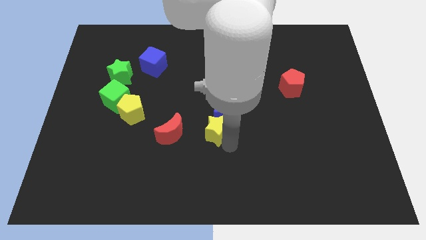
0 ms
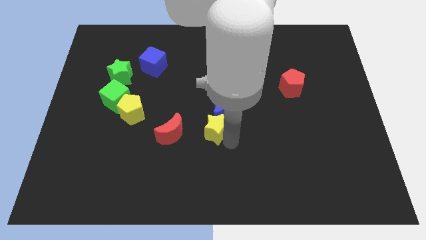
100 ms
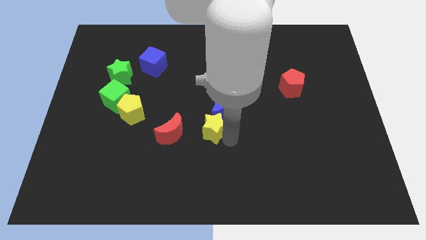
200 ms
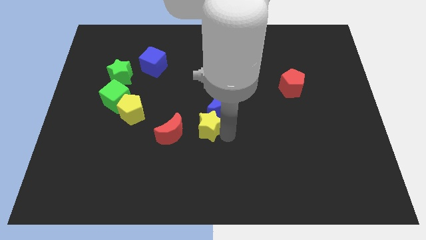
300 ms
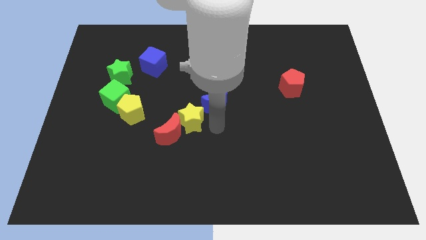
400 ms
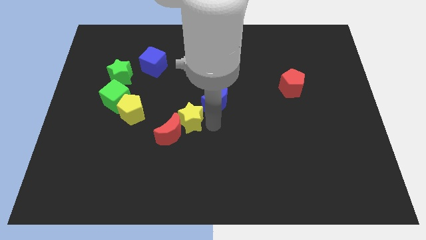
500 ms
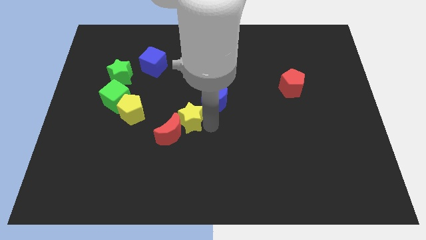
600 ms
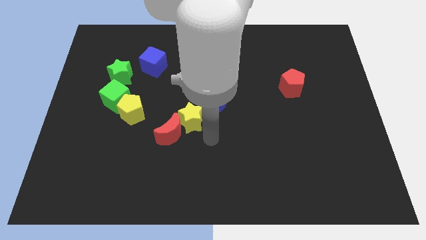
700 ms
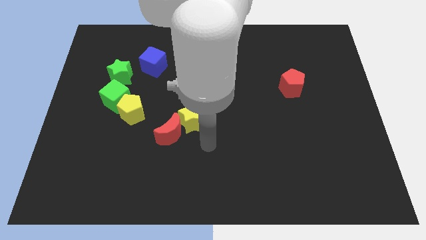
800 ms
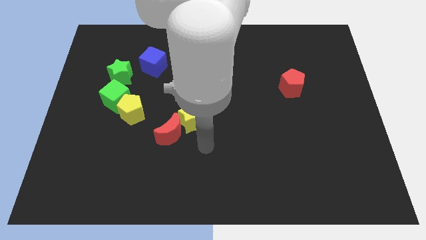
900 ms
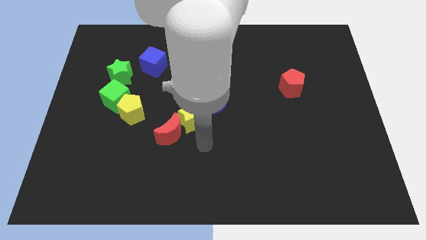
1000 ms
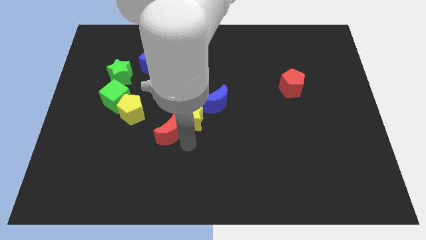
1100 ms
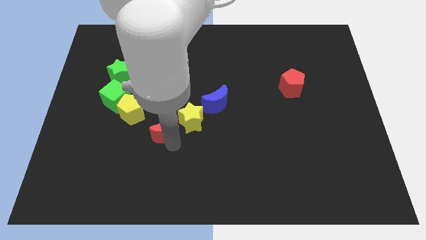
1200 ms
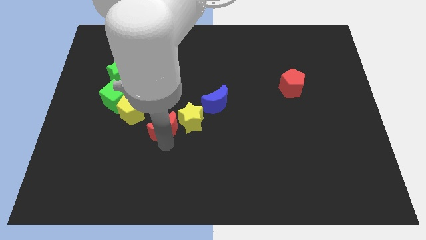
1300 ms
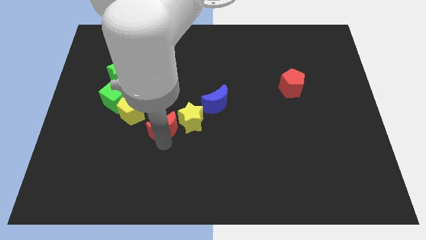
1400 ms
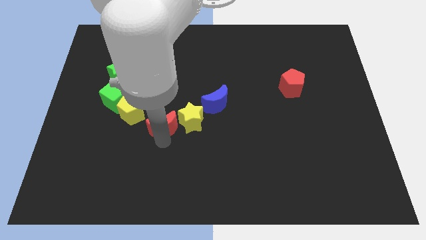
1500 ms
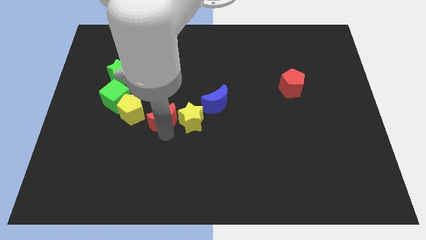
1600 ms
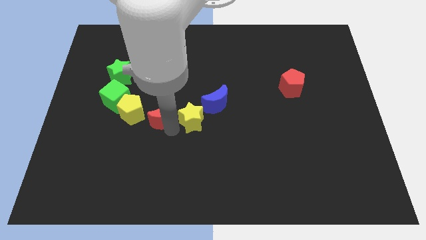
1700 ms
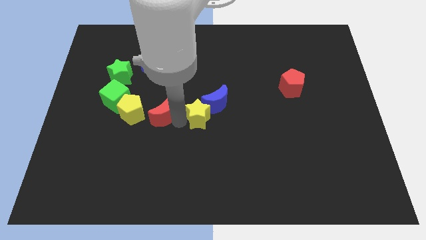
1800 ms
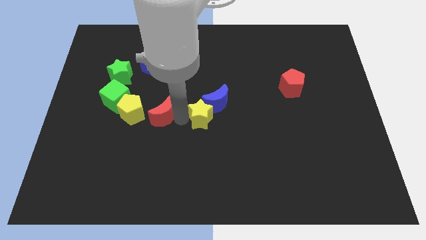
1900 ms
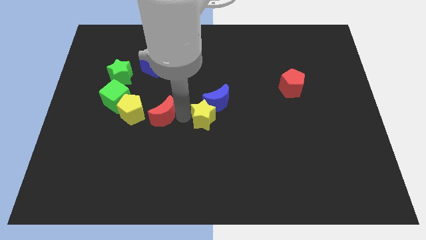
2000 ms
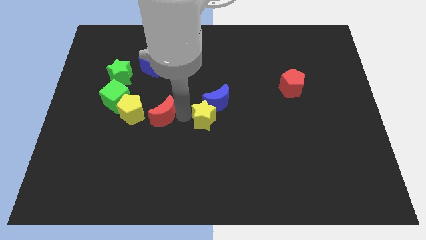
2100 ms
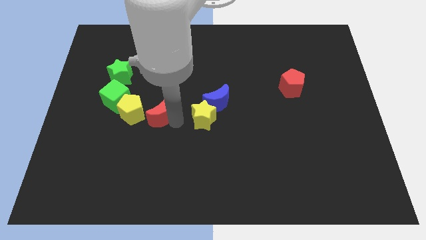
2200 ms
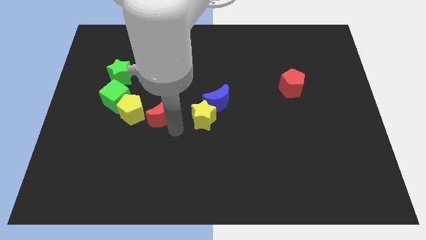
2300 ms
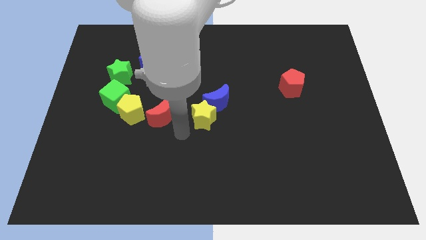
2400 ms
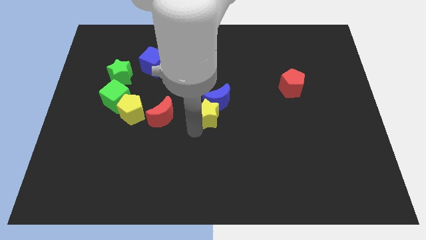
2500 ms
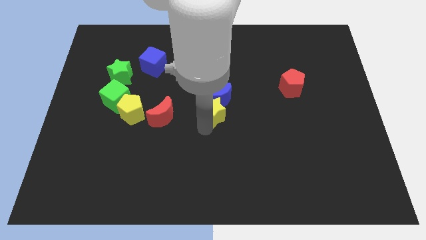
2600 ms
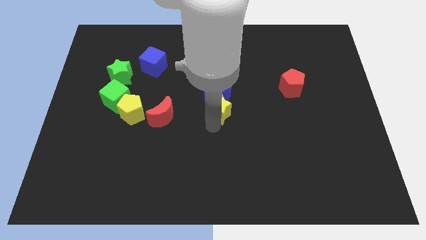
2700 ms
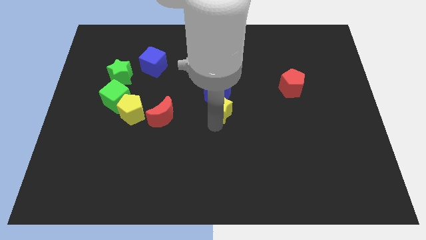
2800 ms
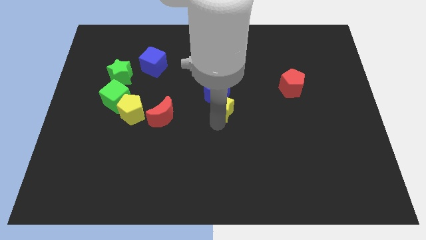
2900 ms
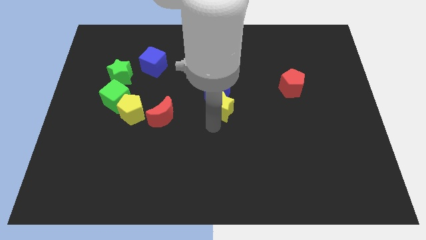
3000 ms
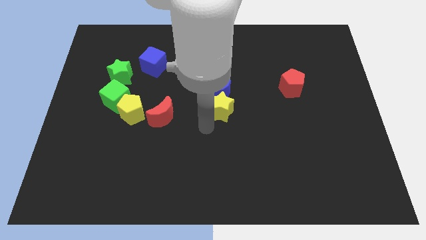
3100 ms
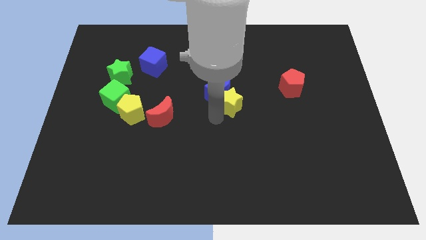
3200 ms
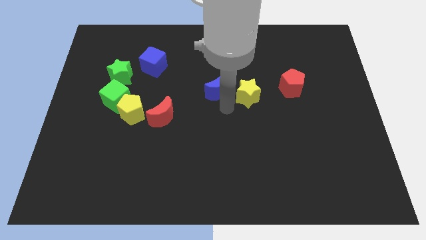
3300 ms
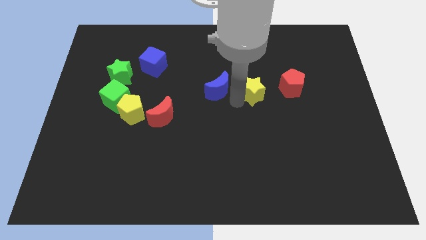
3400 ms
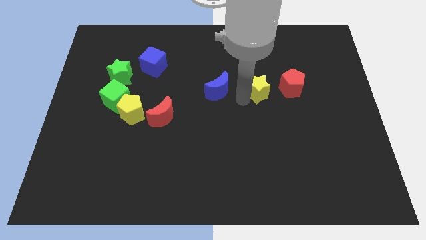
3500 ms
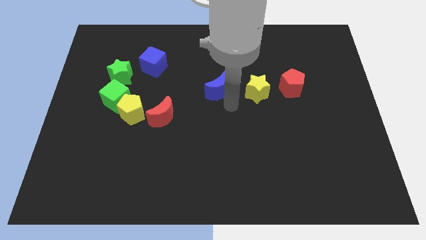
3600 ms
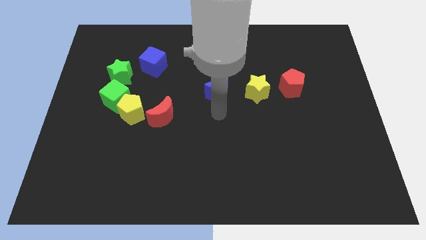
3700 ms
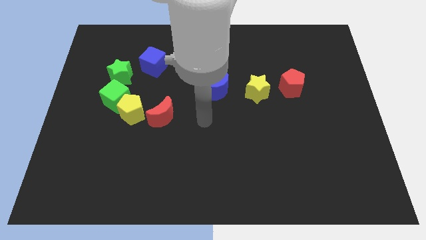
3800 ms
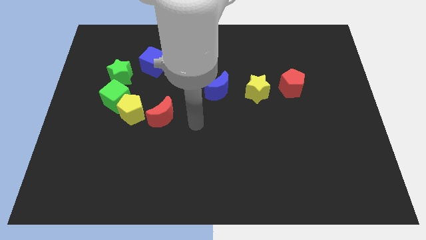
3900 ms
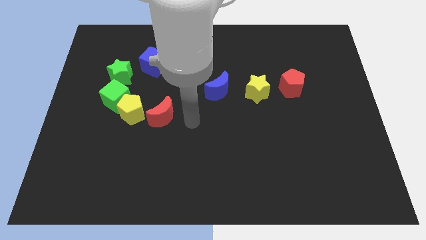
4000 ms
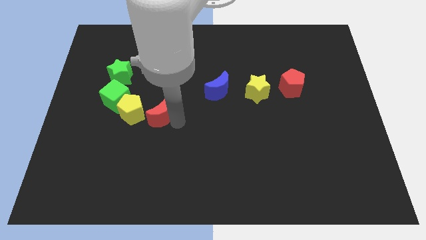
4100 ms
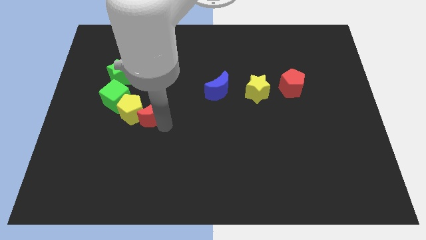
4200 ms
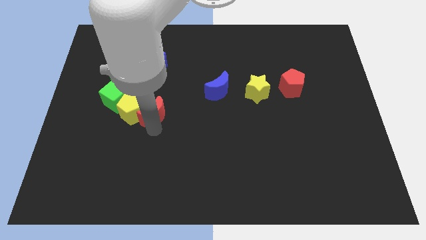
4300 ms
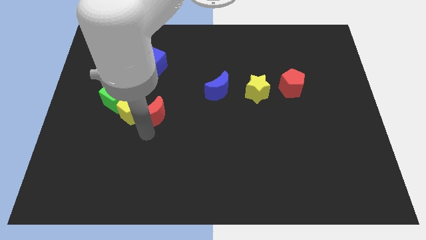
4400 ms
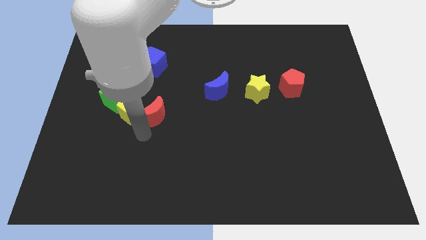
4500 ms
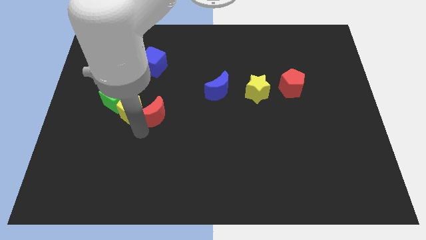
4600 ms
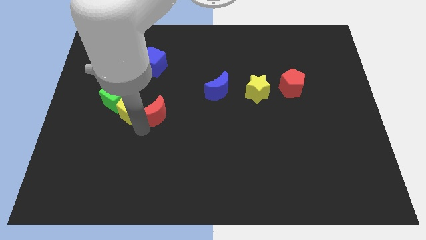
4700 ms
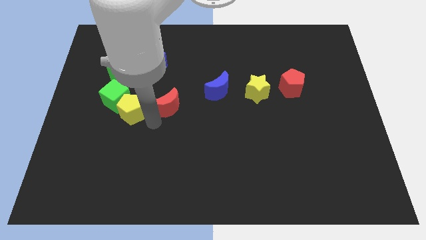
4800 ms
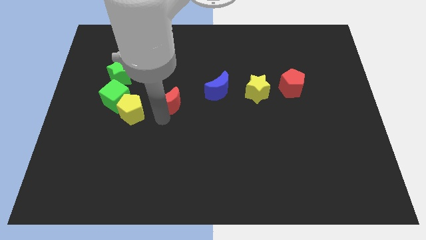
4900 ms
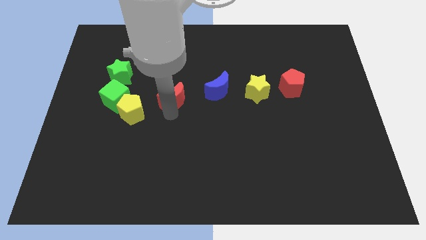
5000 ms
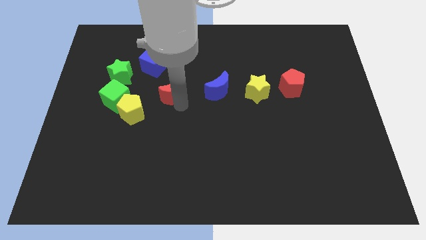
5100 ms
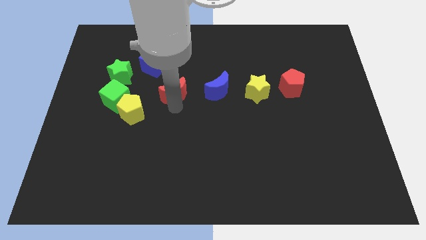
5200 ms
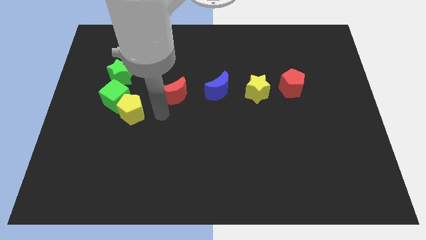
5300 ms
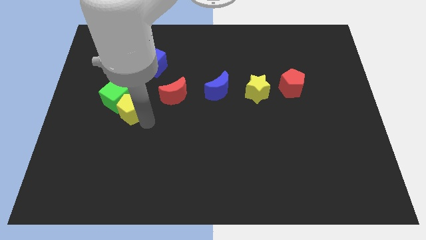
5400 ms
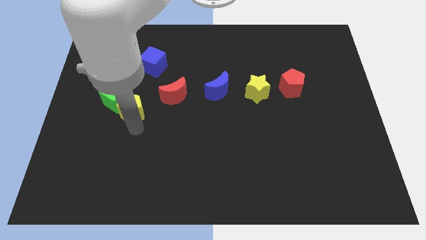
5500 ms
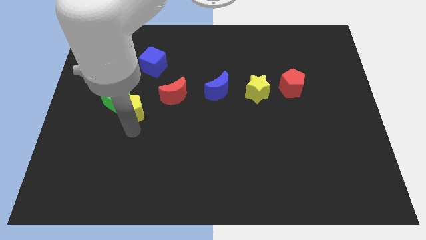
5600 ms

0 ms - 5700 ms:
put the red pentagon yellow star blue and red crescents in a line horizontally

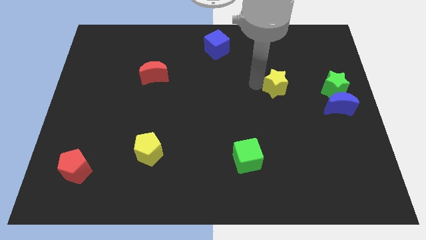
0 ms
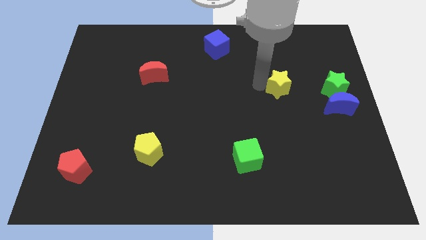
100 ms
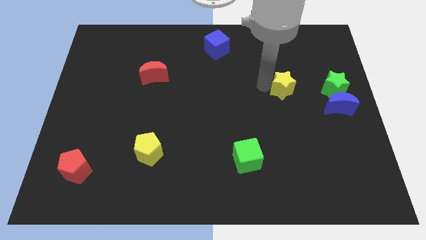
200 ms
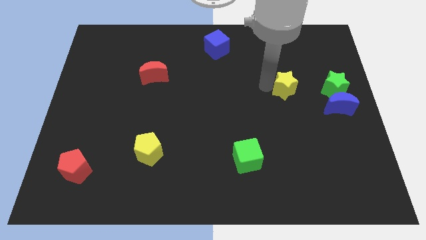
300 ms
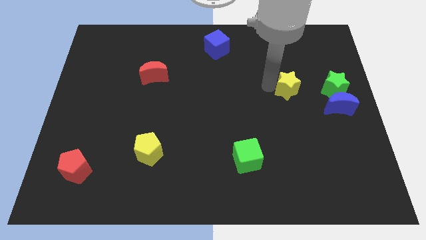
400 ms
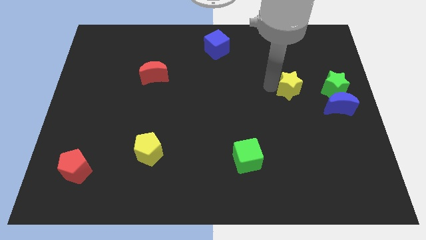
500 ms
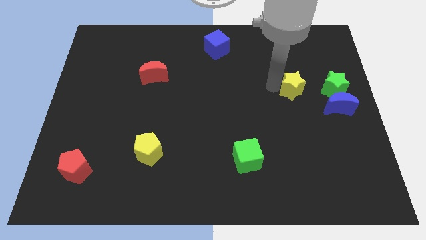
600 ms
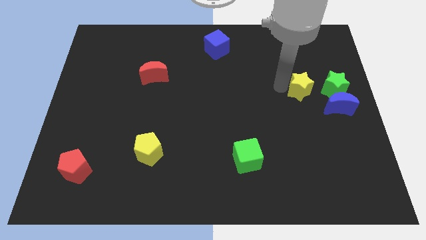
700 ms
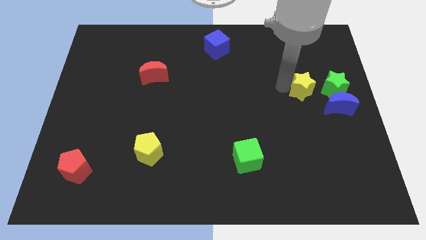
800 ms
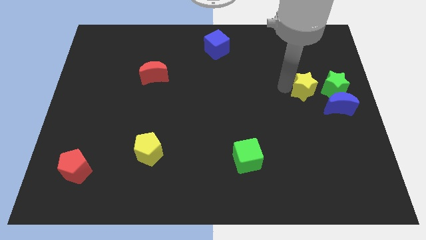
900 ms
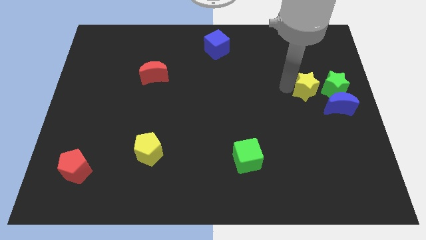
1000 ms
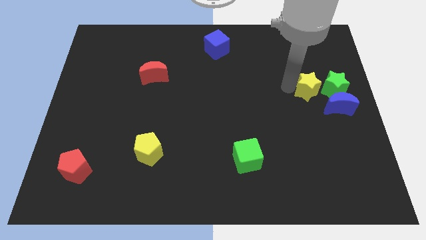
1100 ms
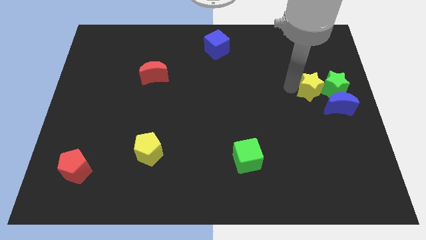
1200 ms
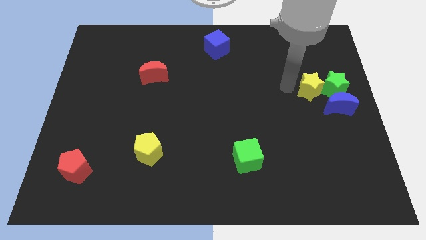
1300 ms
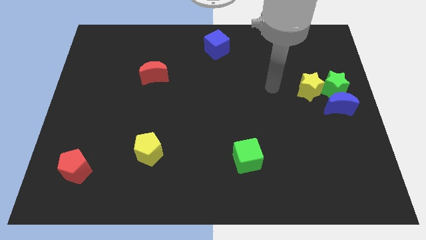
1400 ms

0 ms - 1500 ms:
move the yellow star to the left of the green star

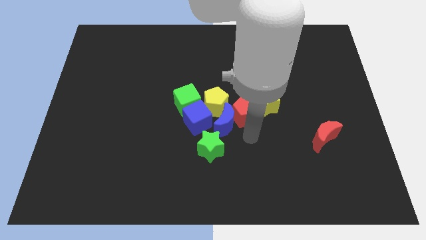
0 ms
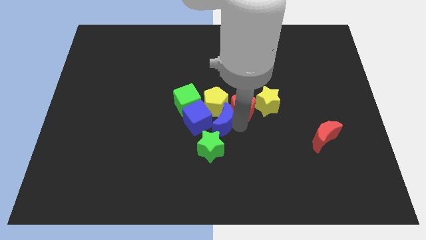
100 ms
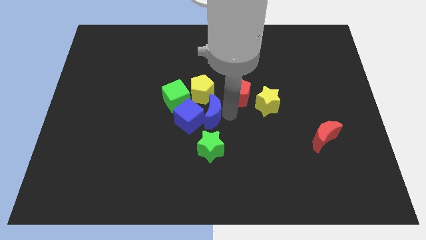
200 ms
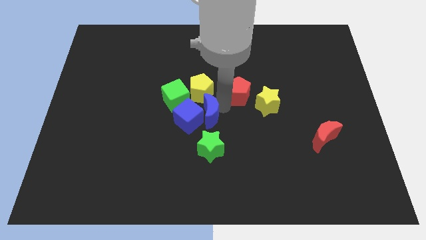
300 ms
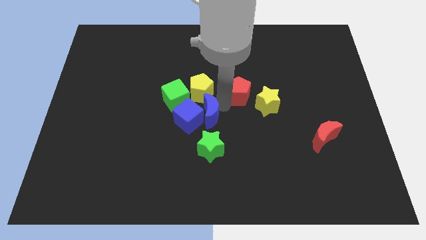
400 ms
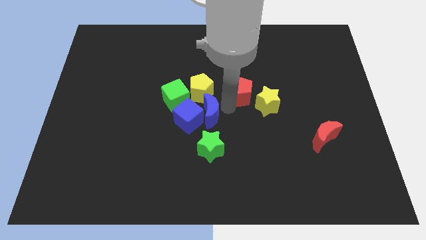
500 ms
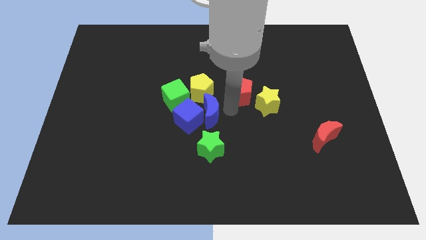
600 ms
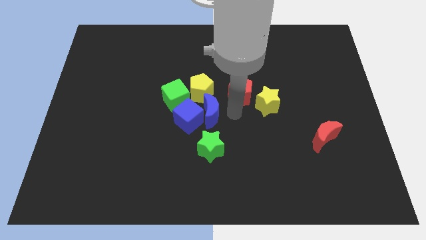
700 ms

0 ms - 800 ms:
place the red pentagon diagonally to the yellow star

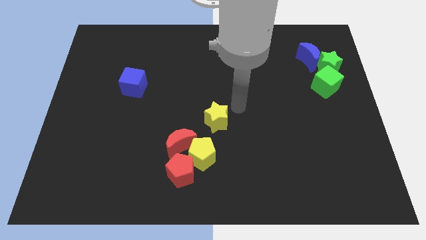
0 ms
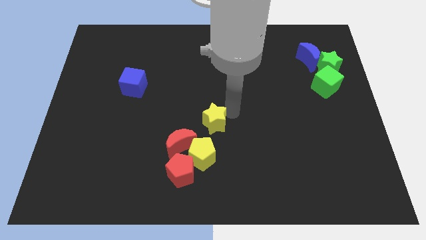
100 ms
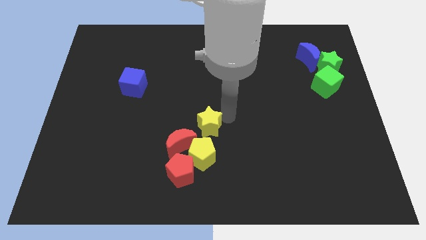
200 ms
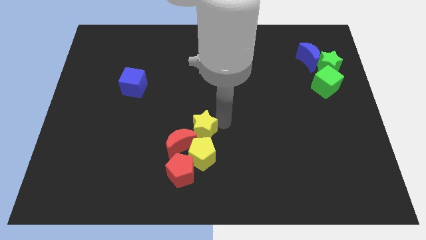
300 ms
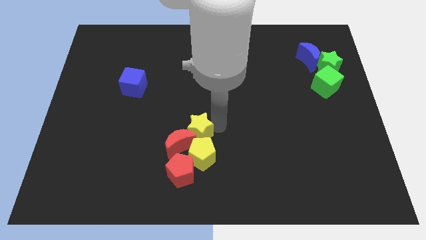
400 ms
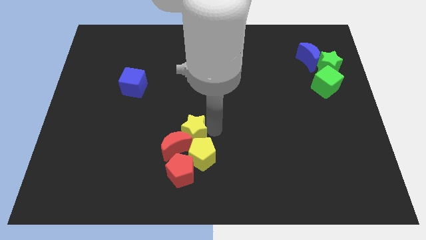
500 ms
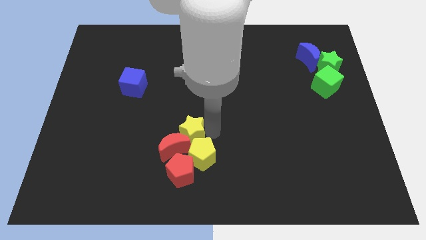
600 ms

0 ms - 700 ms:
push the star into the group of blocks

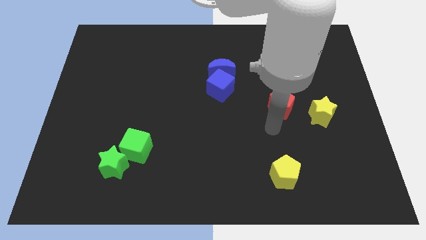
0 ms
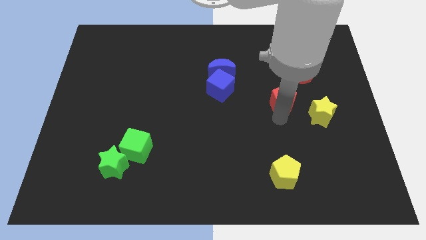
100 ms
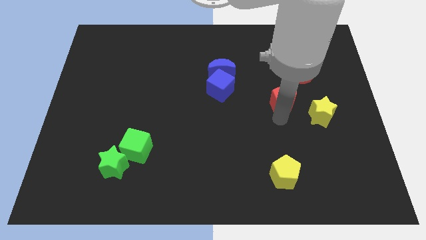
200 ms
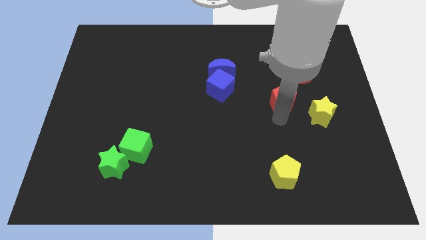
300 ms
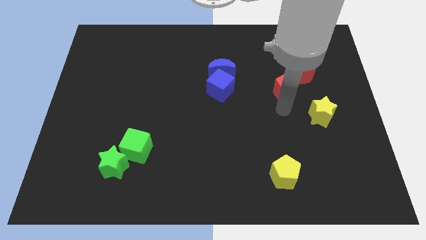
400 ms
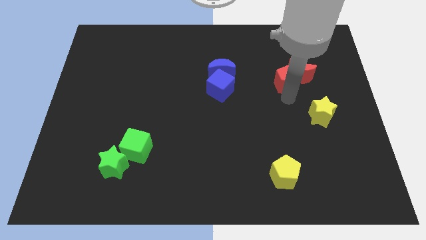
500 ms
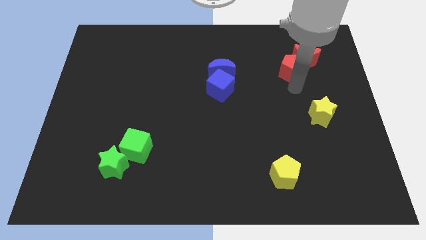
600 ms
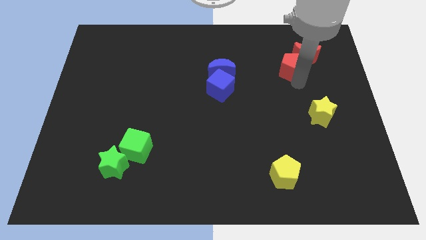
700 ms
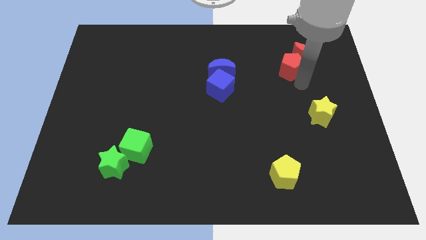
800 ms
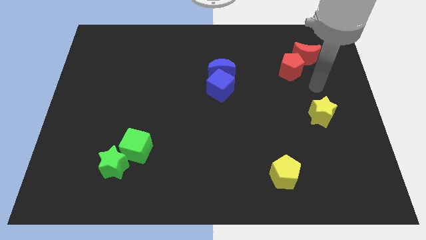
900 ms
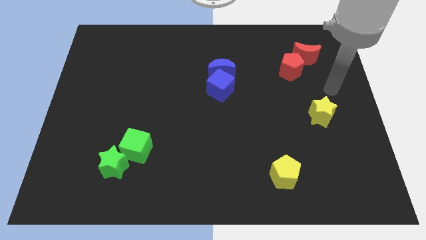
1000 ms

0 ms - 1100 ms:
put the red pentagon into the red moon
